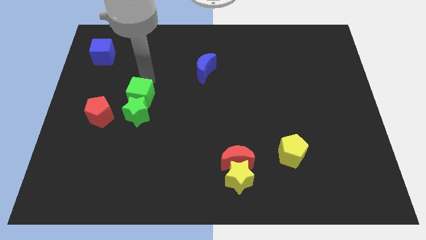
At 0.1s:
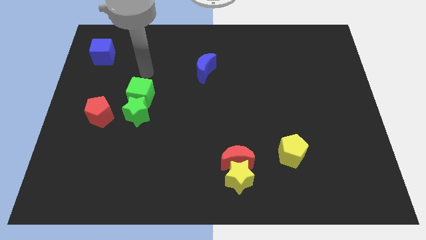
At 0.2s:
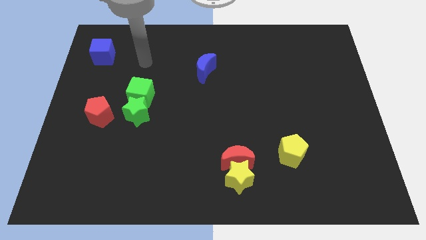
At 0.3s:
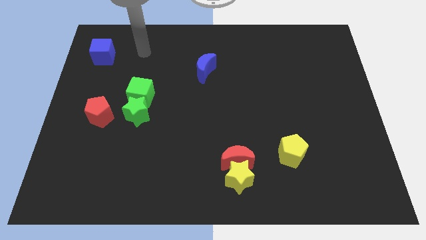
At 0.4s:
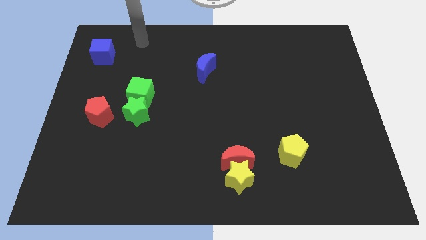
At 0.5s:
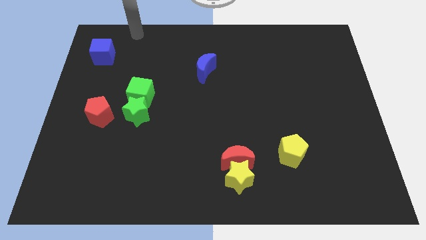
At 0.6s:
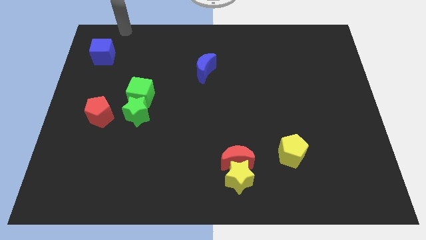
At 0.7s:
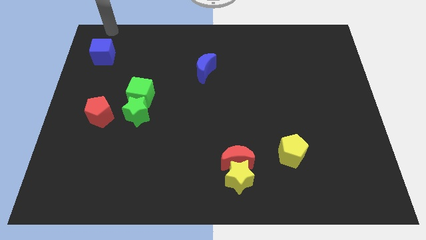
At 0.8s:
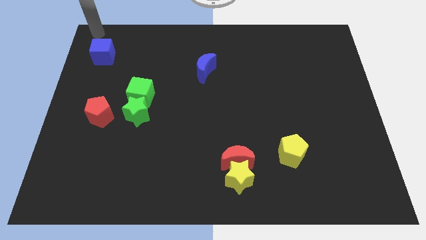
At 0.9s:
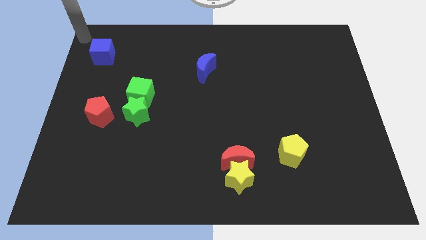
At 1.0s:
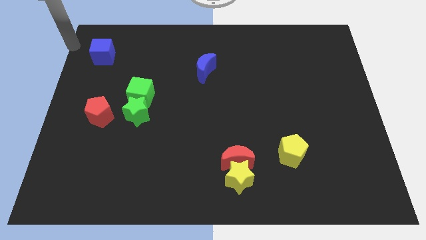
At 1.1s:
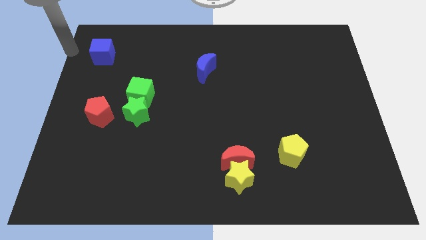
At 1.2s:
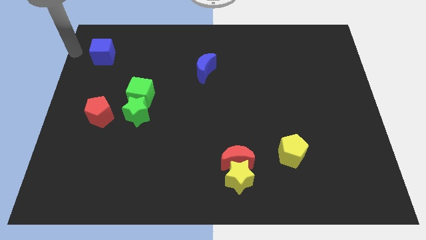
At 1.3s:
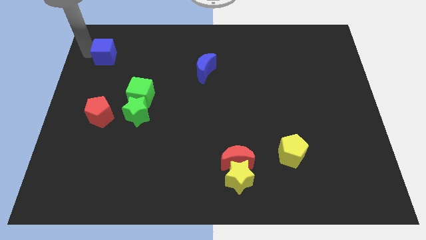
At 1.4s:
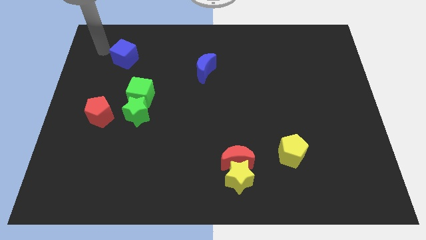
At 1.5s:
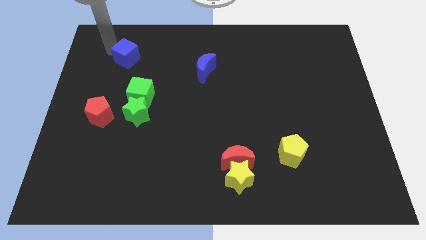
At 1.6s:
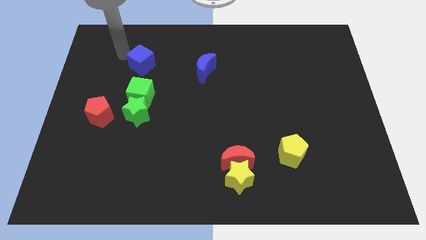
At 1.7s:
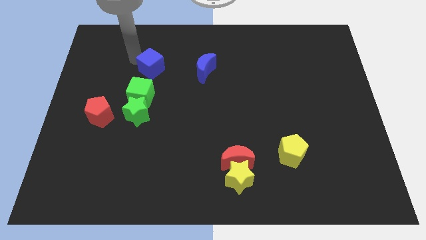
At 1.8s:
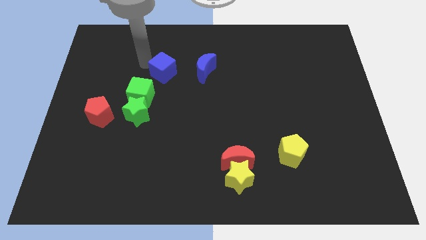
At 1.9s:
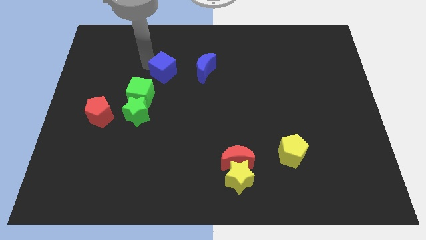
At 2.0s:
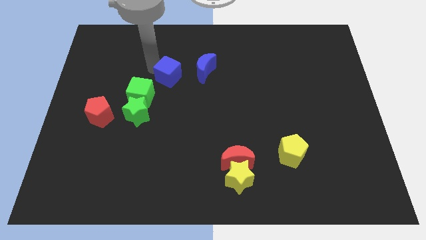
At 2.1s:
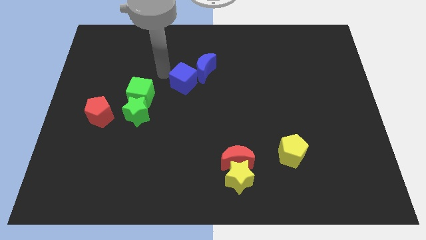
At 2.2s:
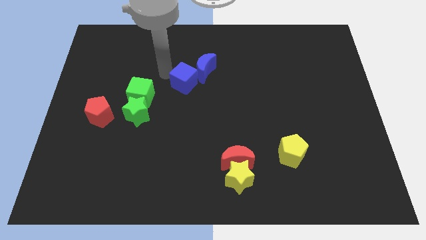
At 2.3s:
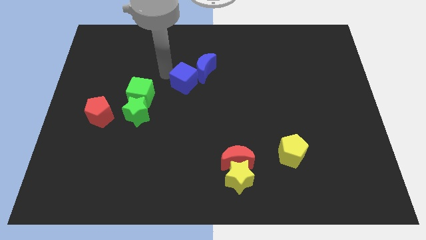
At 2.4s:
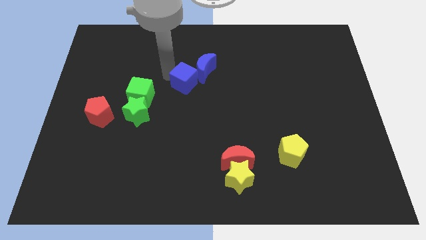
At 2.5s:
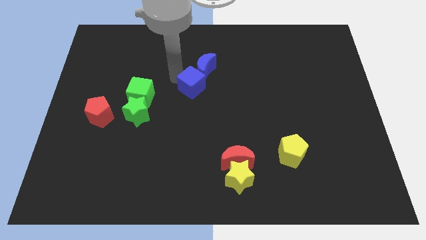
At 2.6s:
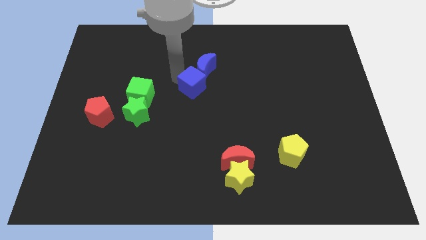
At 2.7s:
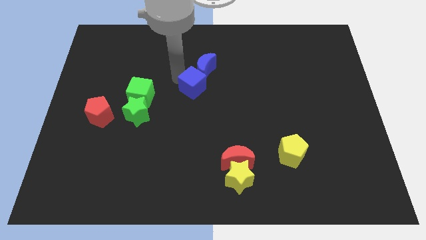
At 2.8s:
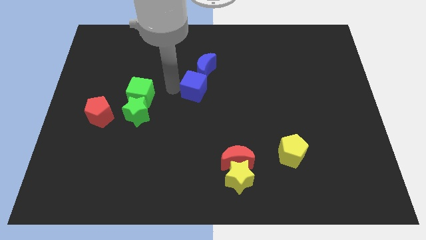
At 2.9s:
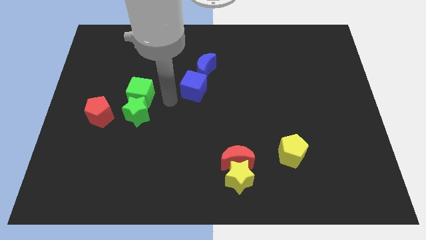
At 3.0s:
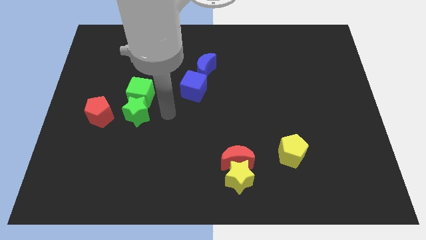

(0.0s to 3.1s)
place blue block bottom of the blue crescent

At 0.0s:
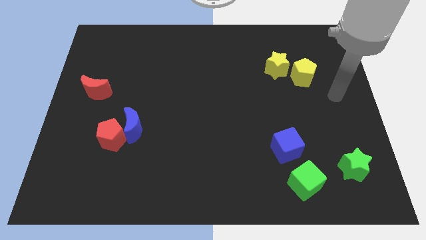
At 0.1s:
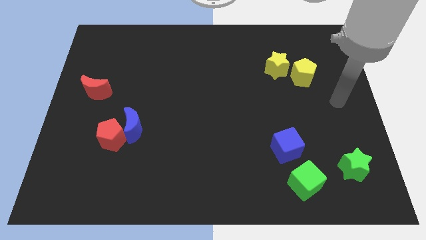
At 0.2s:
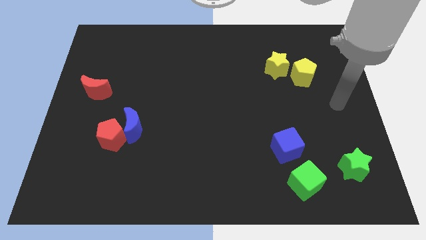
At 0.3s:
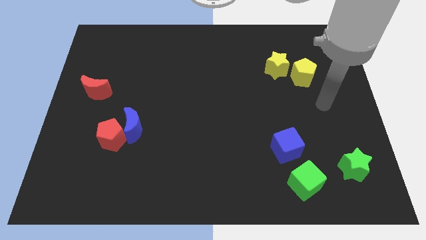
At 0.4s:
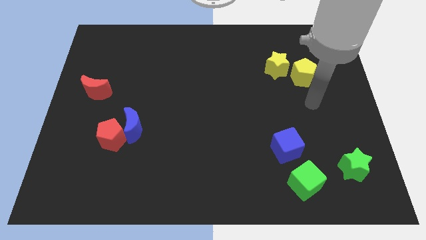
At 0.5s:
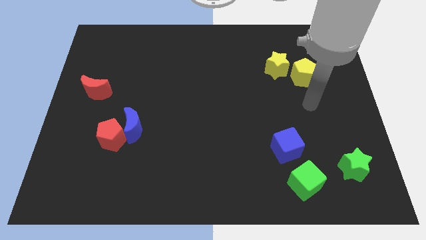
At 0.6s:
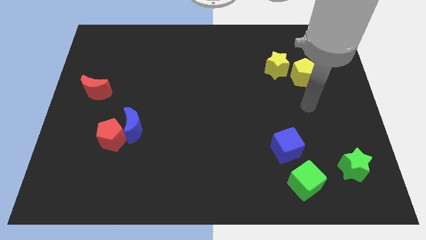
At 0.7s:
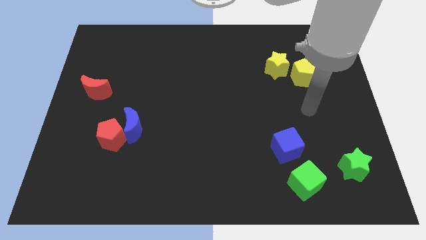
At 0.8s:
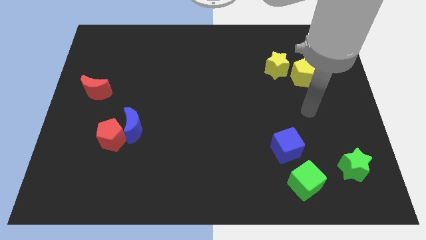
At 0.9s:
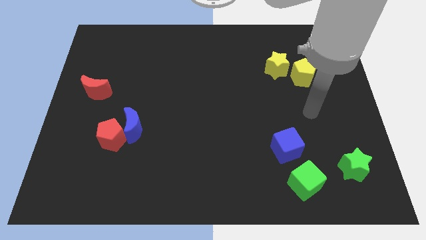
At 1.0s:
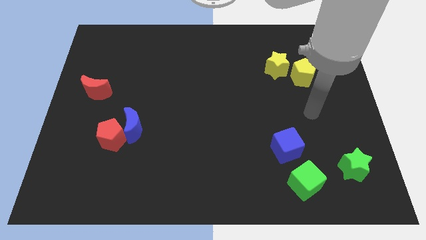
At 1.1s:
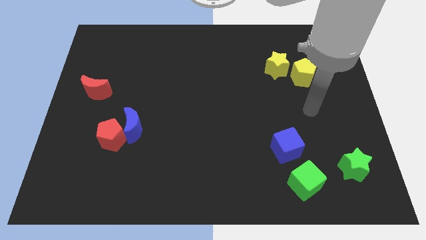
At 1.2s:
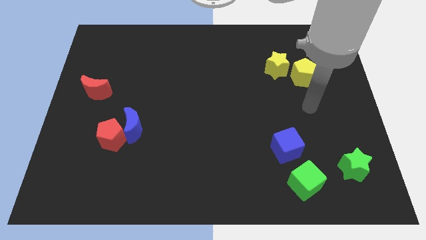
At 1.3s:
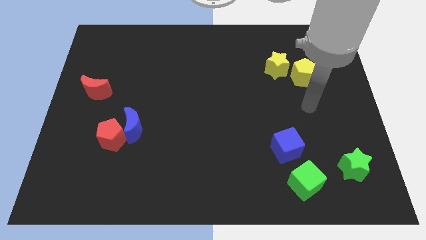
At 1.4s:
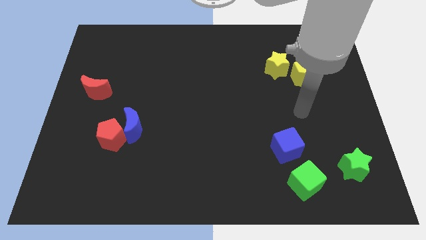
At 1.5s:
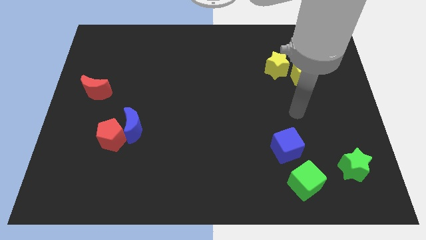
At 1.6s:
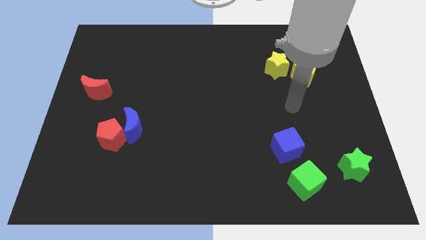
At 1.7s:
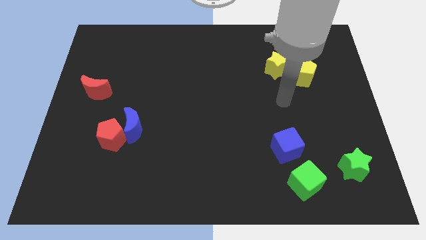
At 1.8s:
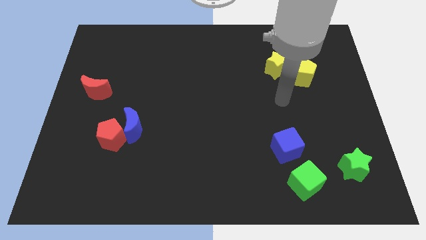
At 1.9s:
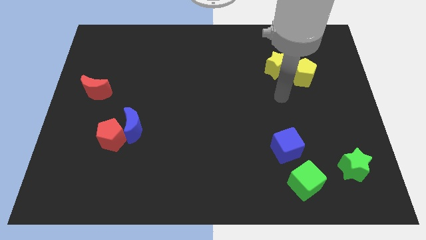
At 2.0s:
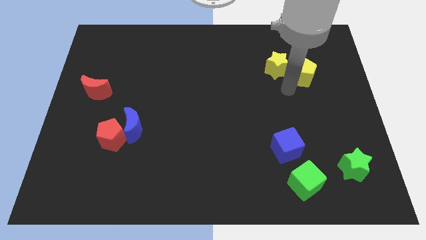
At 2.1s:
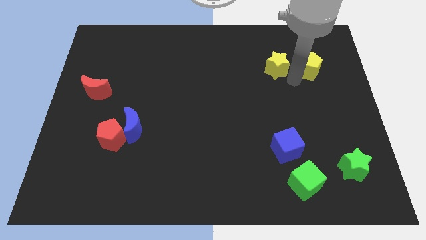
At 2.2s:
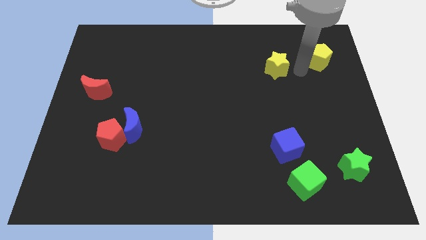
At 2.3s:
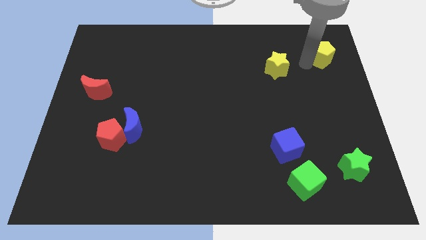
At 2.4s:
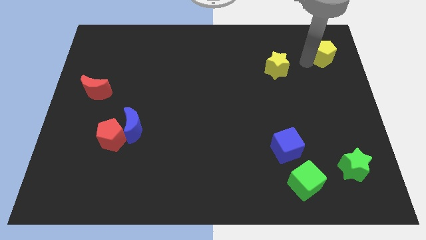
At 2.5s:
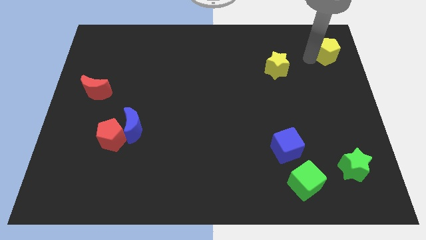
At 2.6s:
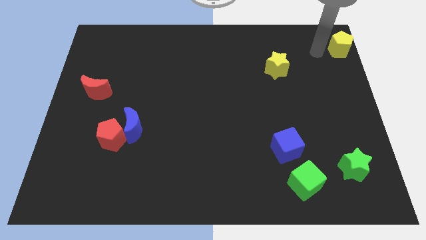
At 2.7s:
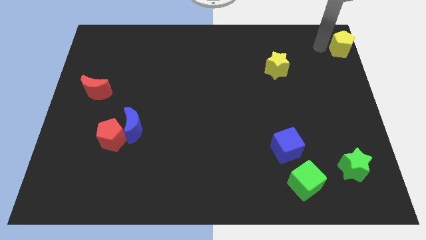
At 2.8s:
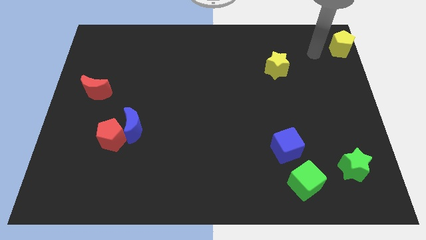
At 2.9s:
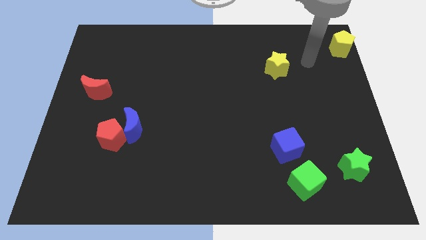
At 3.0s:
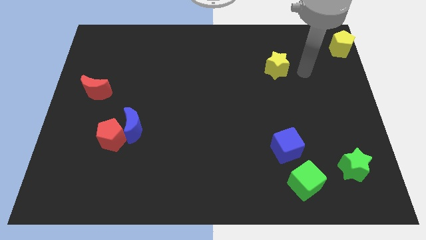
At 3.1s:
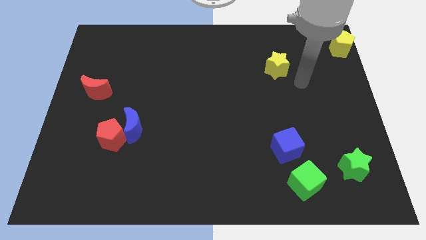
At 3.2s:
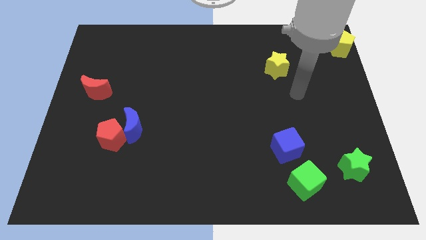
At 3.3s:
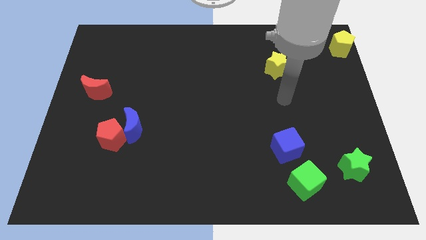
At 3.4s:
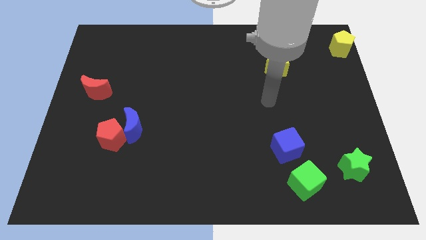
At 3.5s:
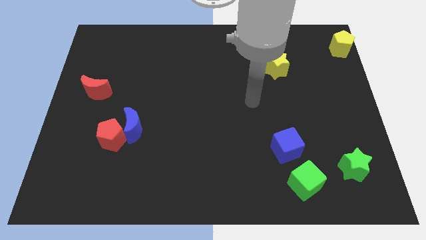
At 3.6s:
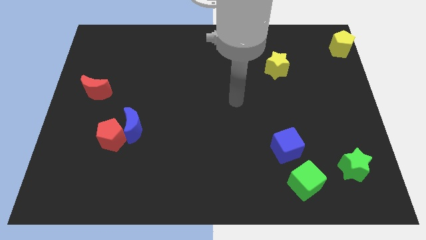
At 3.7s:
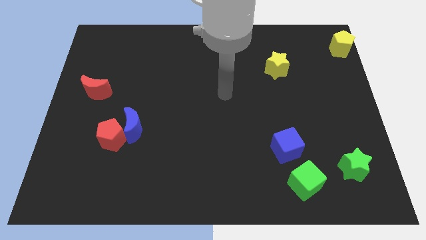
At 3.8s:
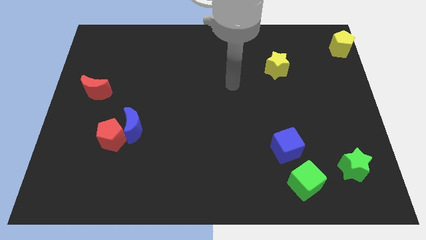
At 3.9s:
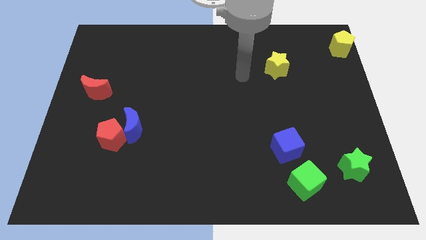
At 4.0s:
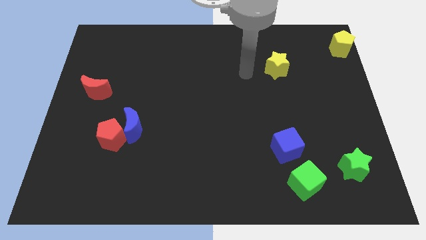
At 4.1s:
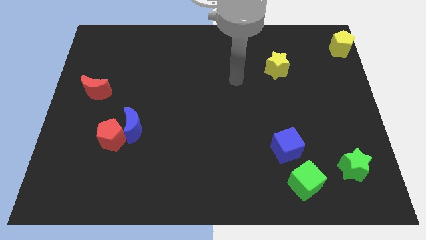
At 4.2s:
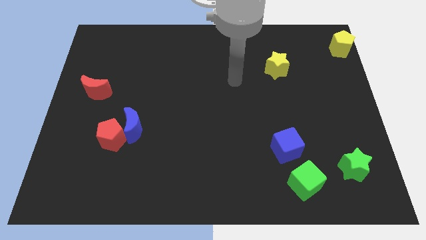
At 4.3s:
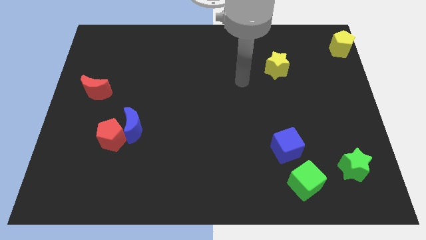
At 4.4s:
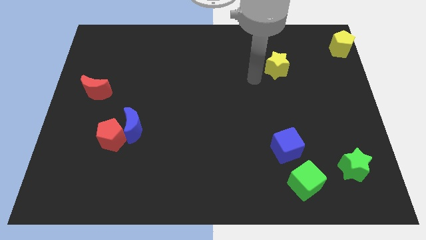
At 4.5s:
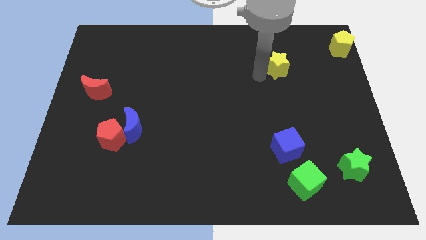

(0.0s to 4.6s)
push the yellow pentagon towards the top right

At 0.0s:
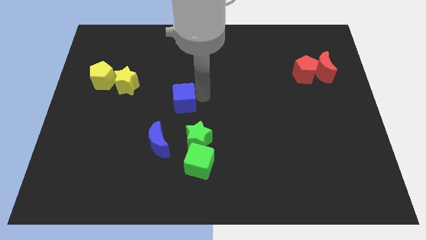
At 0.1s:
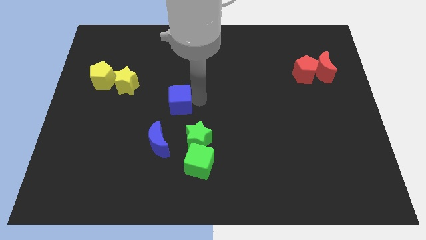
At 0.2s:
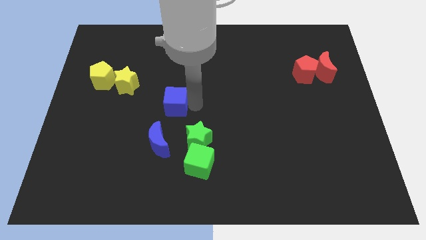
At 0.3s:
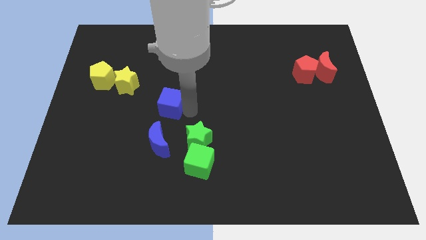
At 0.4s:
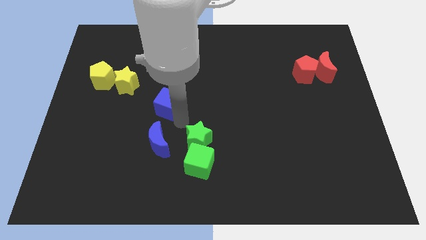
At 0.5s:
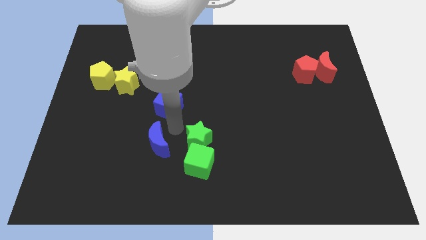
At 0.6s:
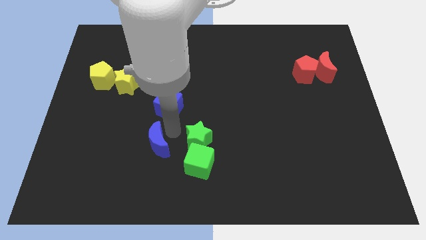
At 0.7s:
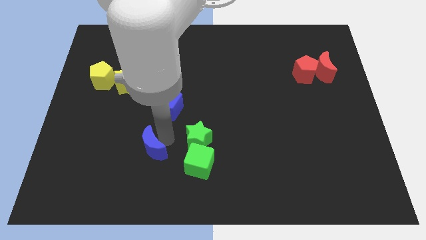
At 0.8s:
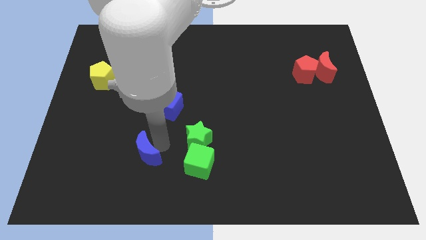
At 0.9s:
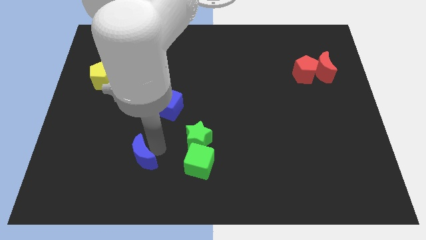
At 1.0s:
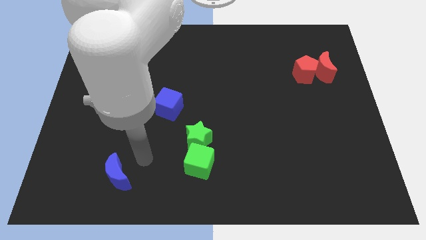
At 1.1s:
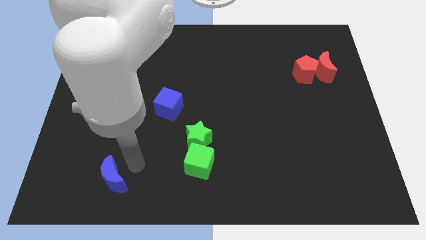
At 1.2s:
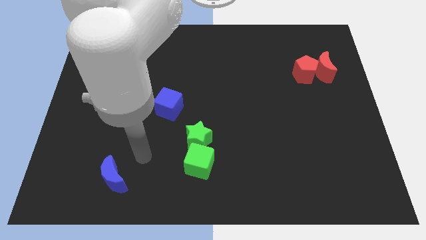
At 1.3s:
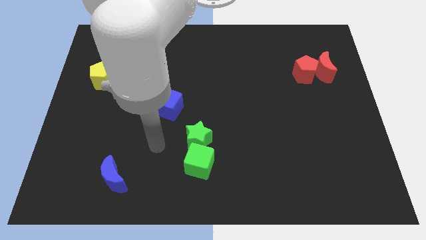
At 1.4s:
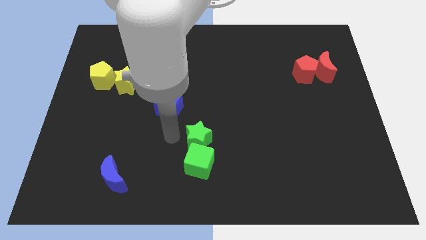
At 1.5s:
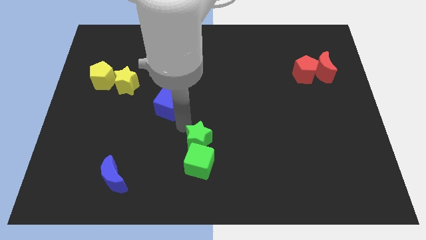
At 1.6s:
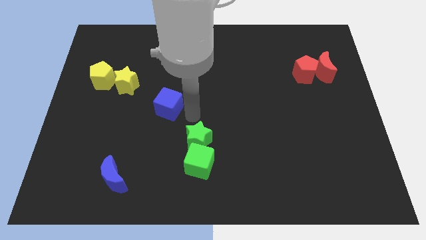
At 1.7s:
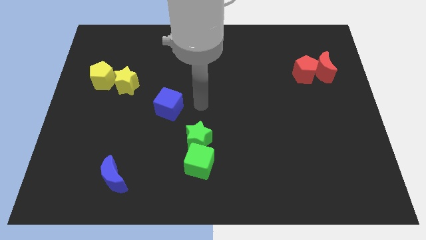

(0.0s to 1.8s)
push blue moon towards bottom left of the board
